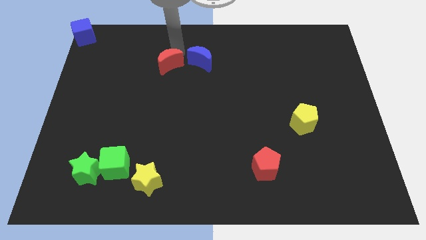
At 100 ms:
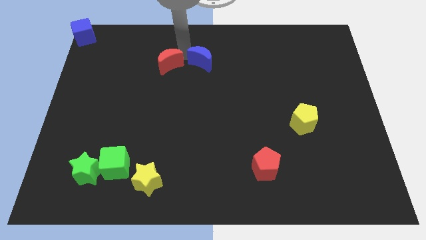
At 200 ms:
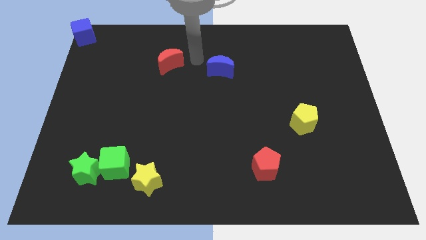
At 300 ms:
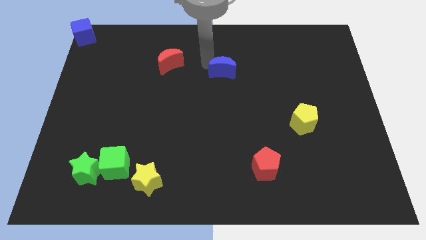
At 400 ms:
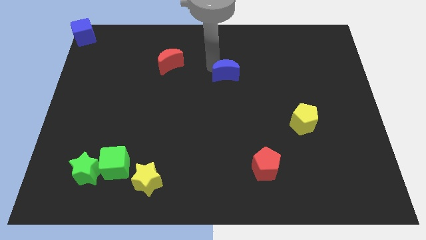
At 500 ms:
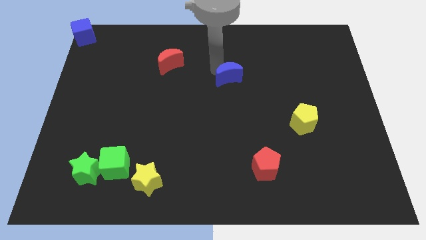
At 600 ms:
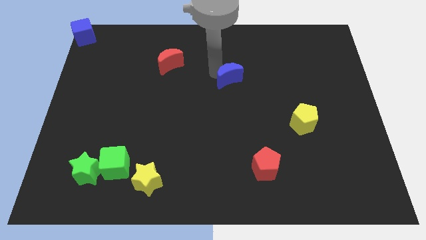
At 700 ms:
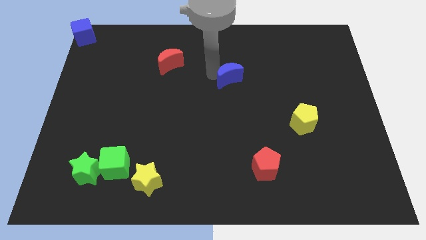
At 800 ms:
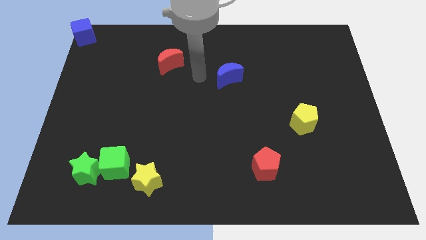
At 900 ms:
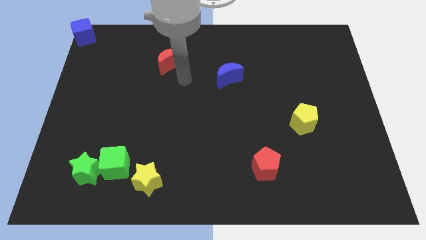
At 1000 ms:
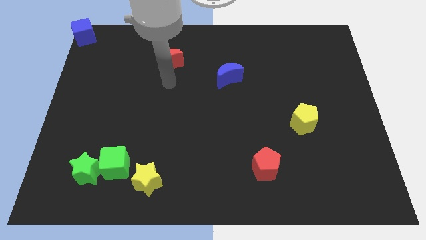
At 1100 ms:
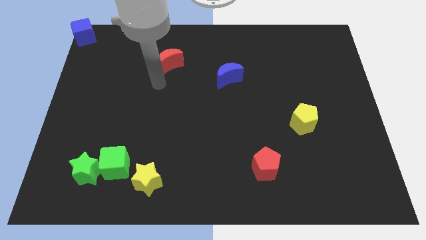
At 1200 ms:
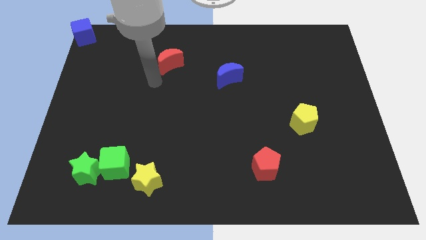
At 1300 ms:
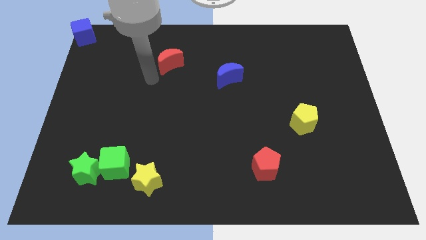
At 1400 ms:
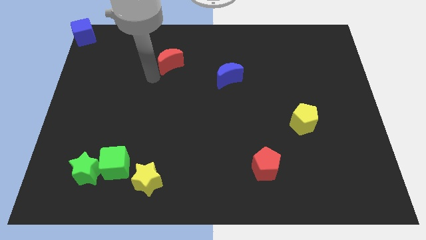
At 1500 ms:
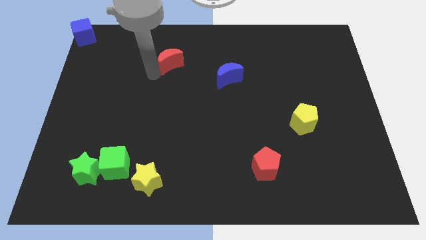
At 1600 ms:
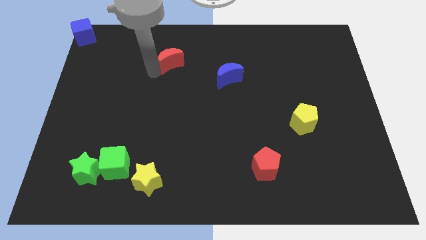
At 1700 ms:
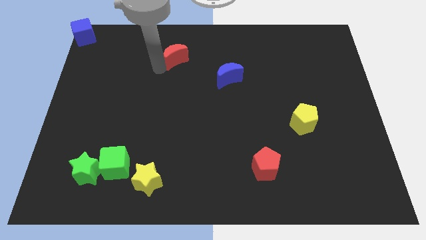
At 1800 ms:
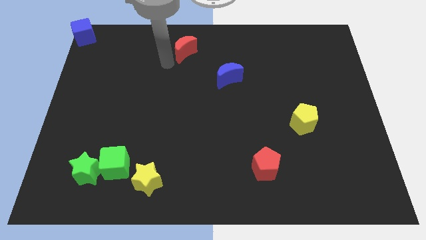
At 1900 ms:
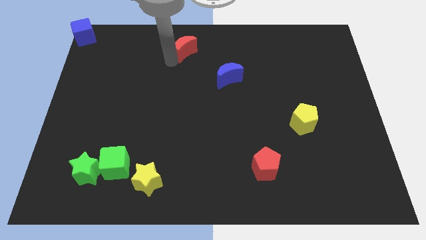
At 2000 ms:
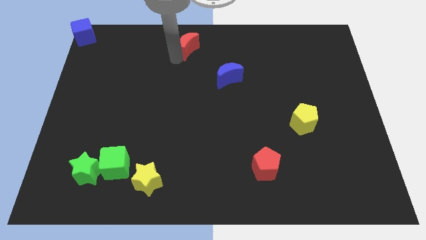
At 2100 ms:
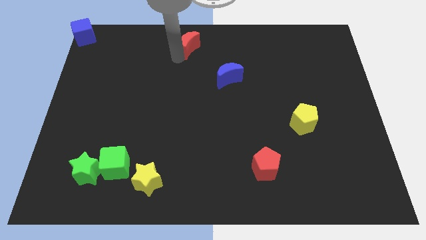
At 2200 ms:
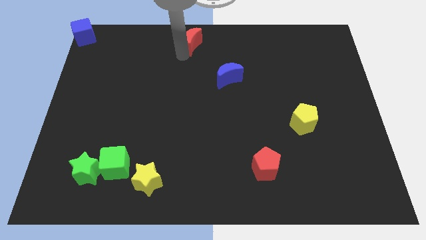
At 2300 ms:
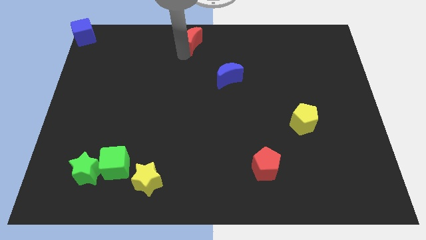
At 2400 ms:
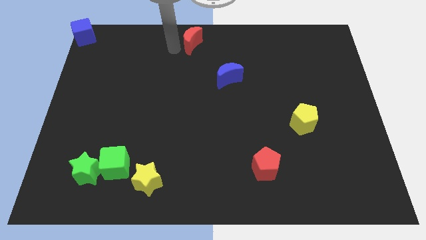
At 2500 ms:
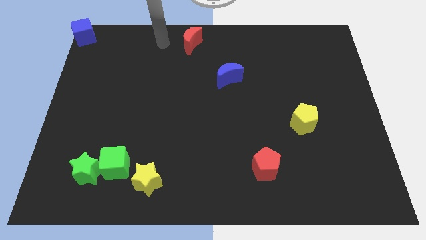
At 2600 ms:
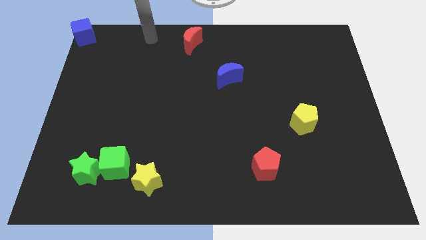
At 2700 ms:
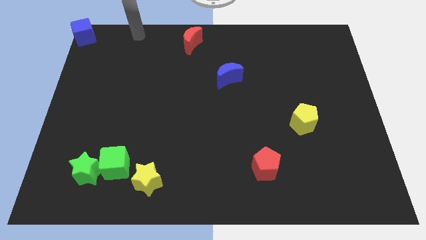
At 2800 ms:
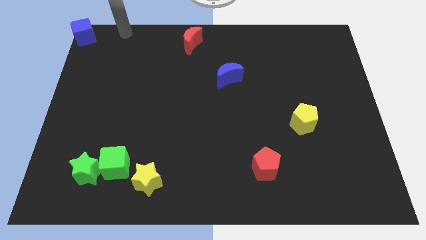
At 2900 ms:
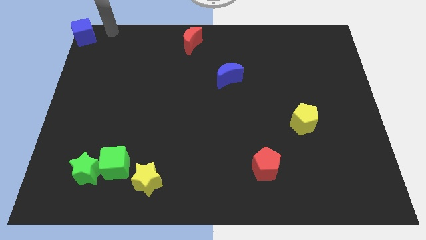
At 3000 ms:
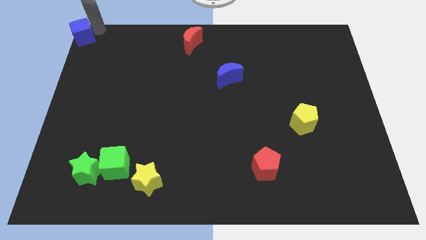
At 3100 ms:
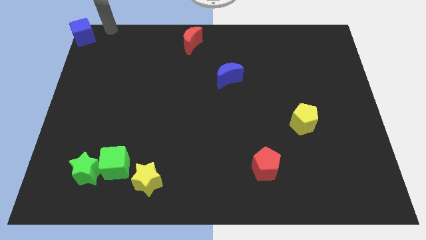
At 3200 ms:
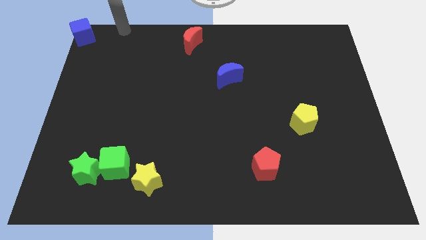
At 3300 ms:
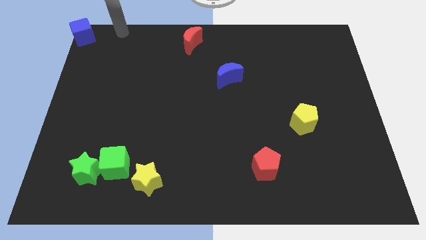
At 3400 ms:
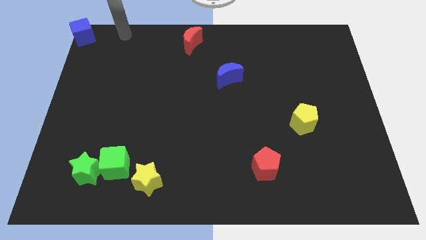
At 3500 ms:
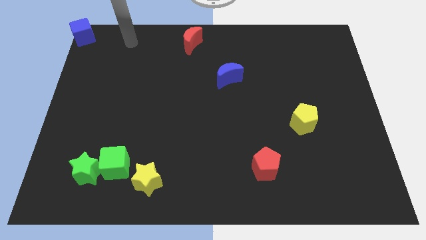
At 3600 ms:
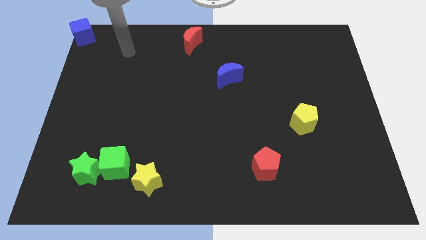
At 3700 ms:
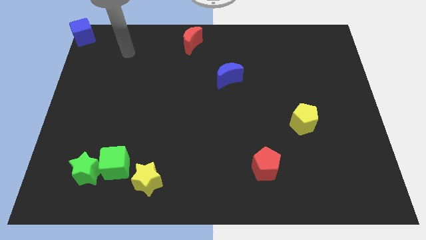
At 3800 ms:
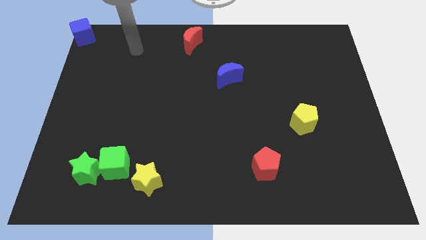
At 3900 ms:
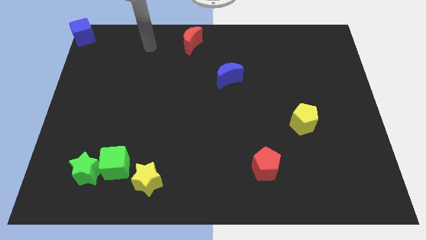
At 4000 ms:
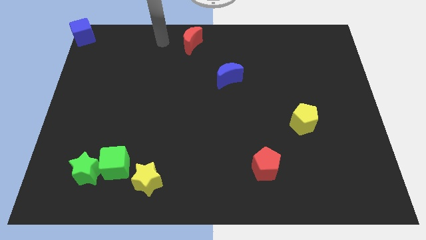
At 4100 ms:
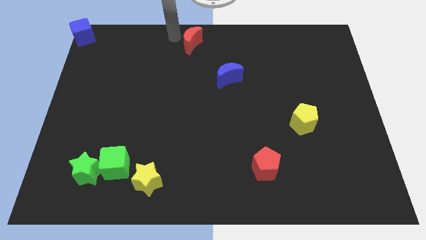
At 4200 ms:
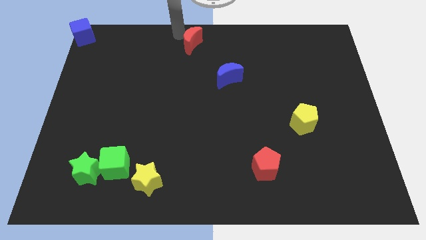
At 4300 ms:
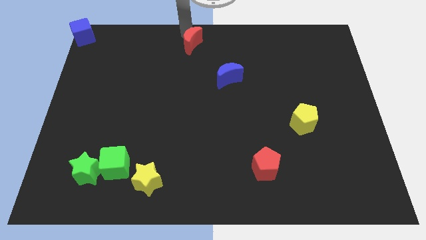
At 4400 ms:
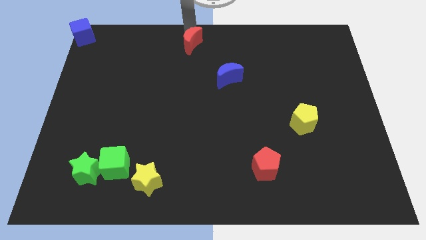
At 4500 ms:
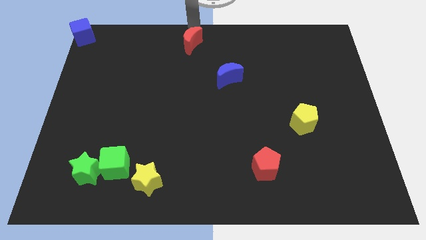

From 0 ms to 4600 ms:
separate the blue moon and red moon

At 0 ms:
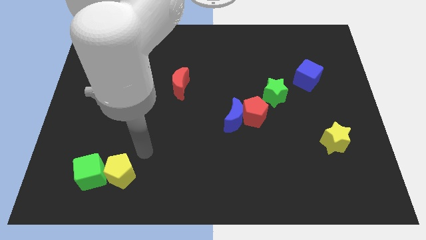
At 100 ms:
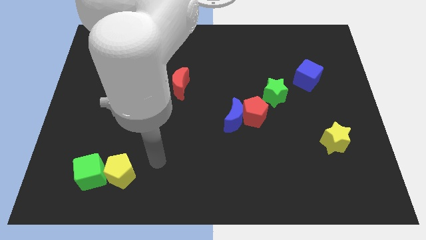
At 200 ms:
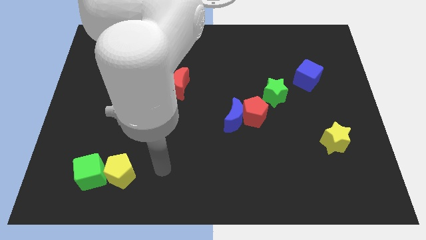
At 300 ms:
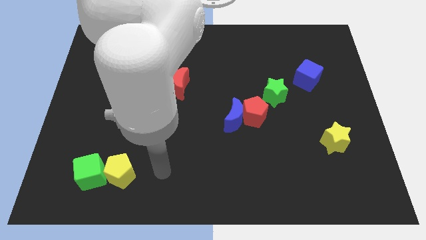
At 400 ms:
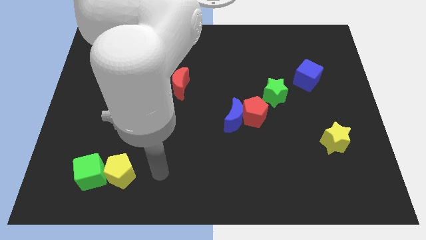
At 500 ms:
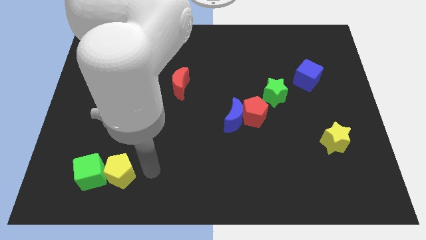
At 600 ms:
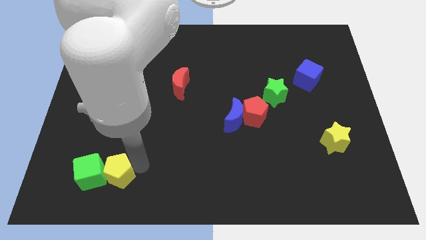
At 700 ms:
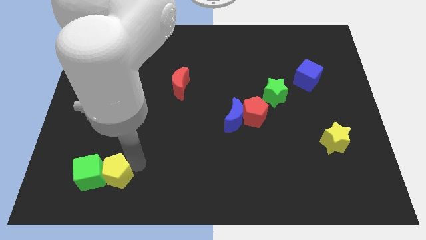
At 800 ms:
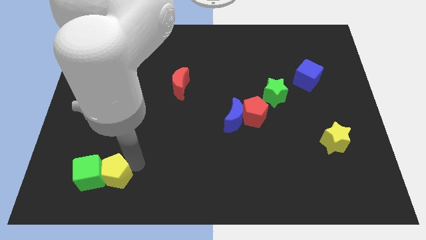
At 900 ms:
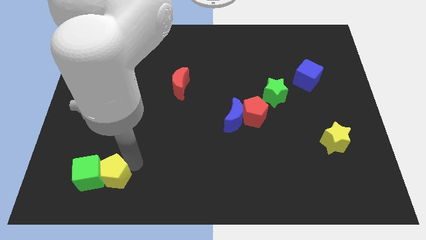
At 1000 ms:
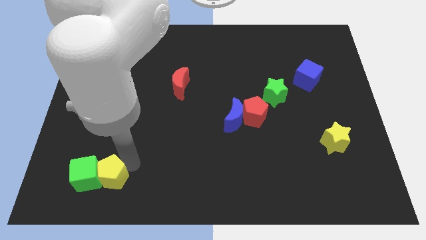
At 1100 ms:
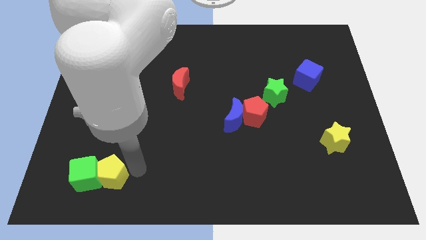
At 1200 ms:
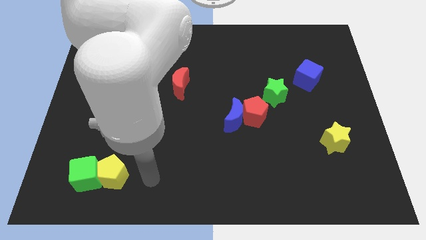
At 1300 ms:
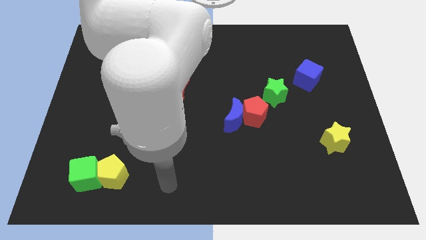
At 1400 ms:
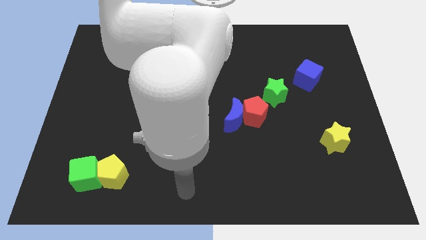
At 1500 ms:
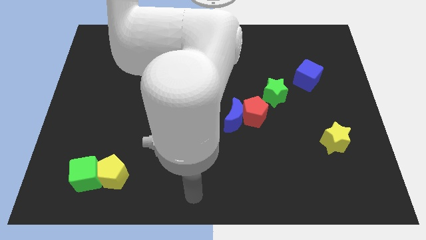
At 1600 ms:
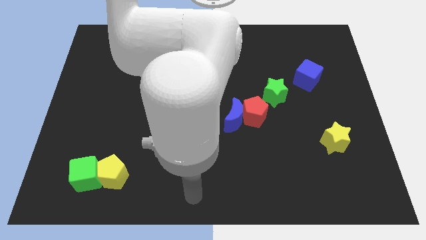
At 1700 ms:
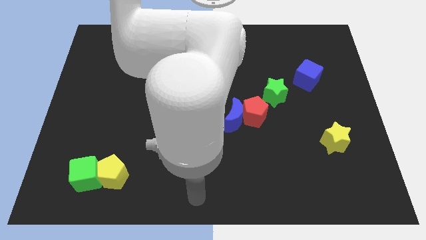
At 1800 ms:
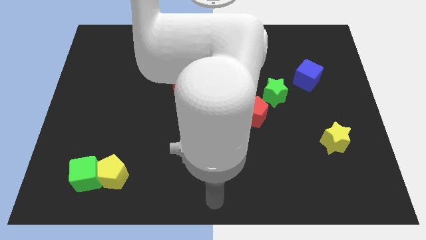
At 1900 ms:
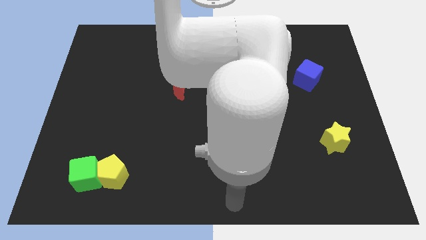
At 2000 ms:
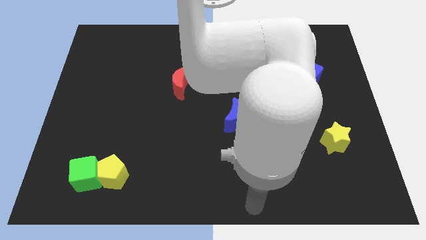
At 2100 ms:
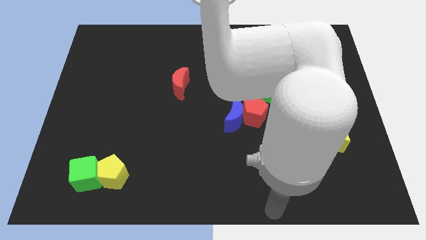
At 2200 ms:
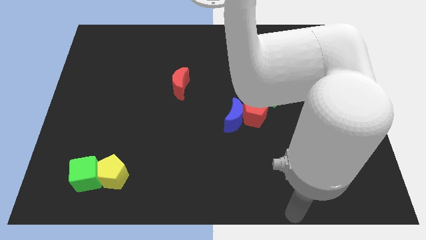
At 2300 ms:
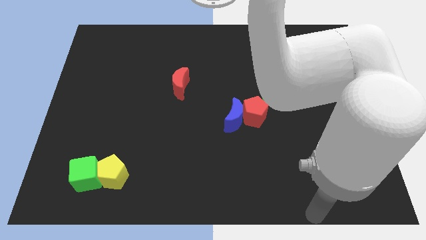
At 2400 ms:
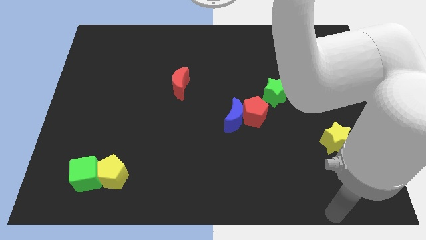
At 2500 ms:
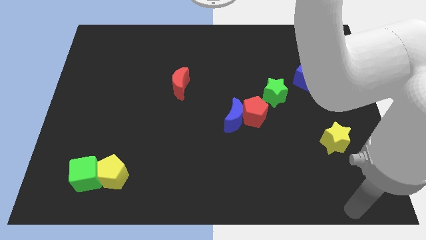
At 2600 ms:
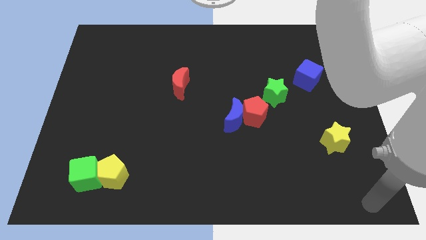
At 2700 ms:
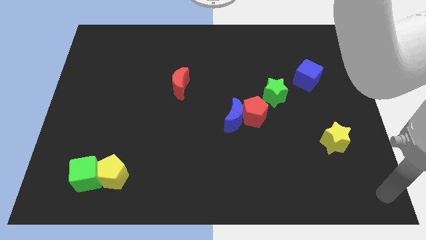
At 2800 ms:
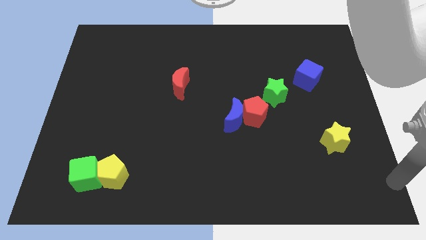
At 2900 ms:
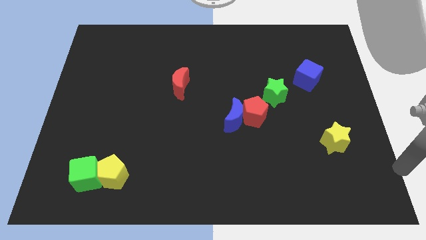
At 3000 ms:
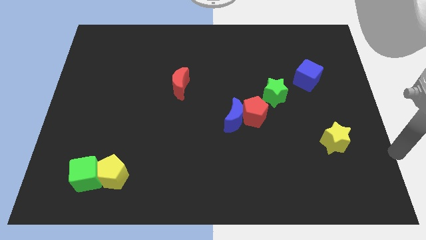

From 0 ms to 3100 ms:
push the green cube and yellow pentagon slightly left

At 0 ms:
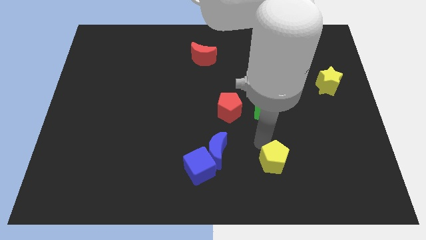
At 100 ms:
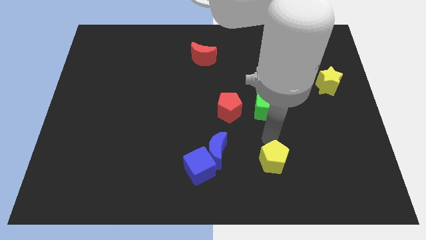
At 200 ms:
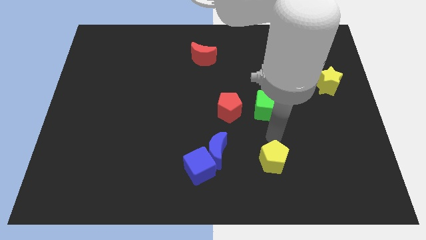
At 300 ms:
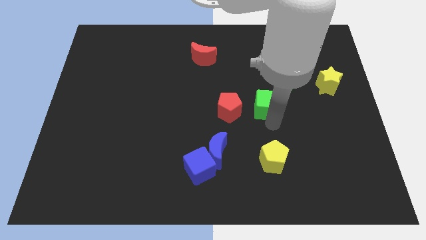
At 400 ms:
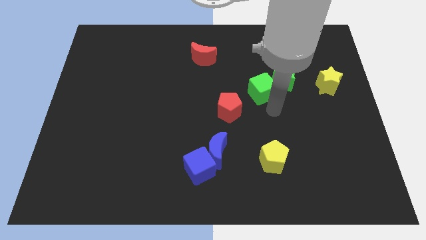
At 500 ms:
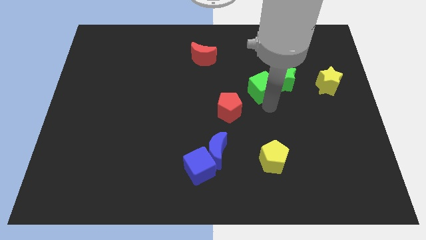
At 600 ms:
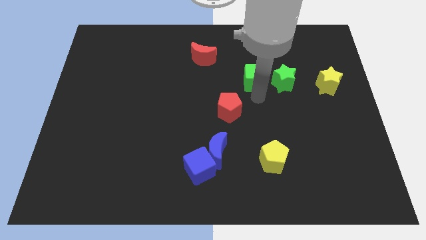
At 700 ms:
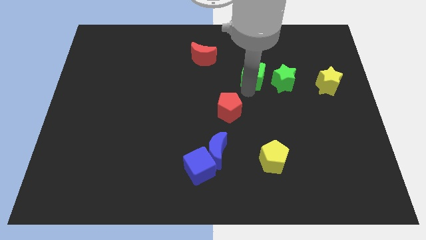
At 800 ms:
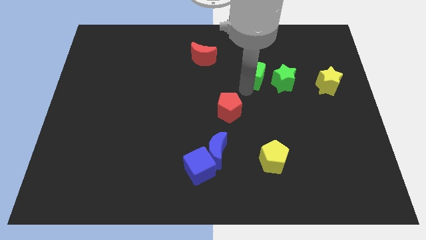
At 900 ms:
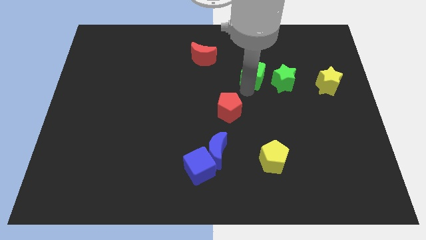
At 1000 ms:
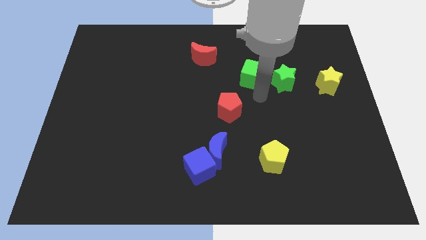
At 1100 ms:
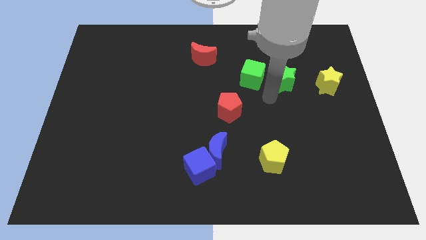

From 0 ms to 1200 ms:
move the green cube slightly to the top

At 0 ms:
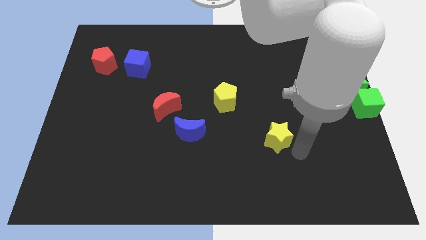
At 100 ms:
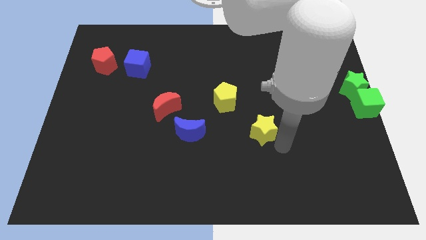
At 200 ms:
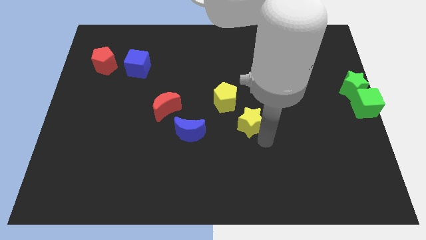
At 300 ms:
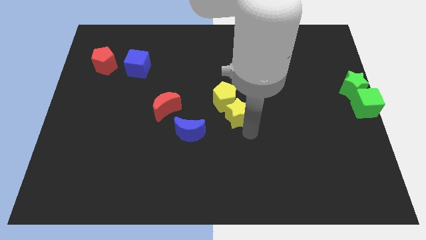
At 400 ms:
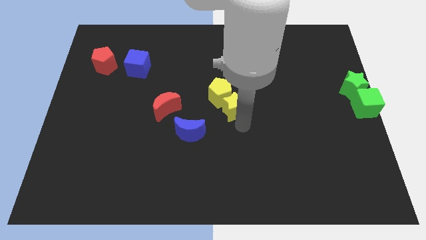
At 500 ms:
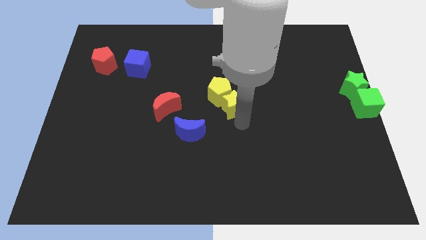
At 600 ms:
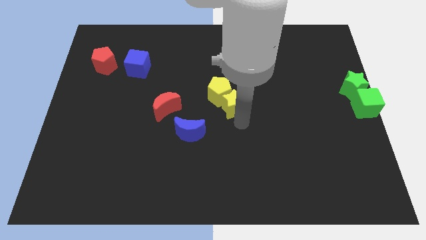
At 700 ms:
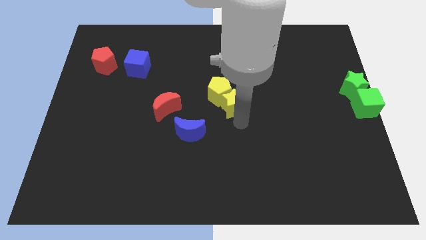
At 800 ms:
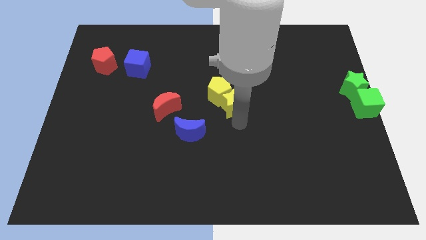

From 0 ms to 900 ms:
move the yellow star into the yellow pentagon
